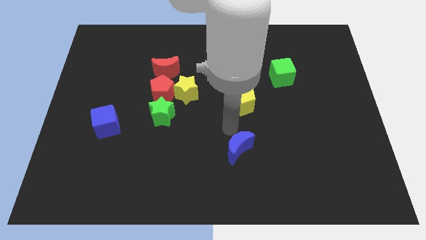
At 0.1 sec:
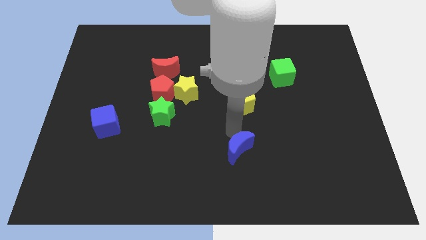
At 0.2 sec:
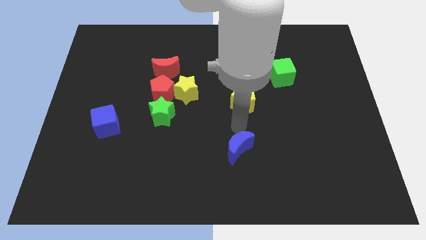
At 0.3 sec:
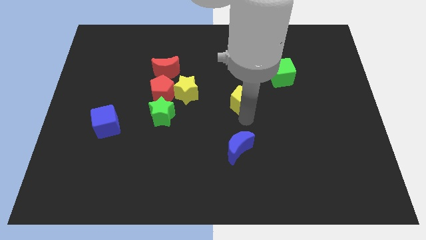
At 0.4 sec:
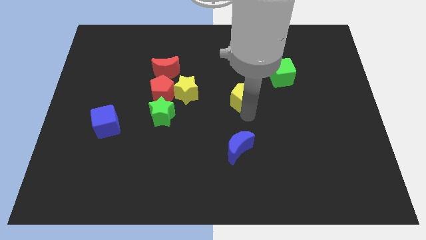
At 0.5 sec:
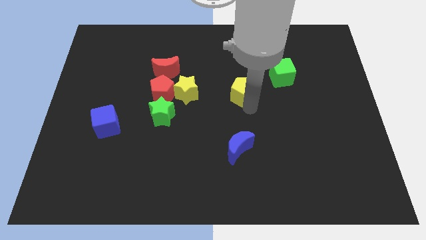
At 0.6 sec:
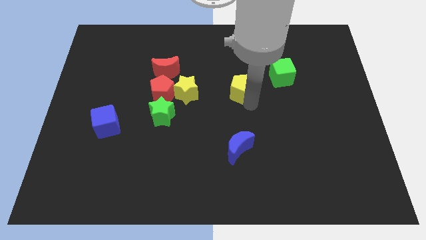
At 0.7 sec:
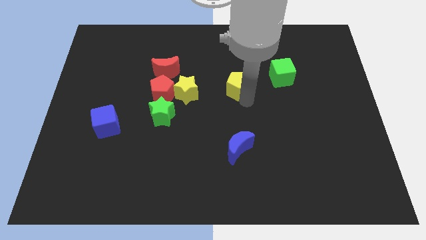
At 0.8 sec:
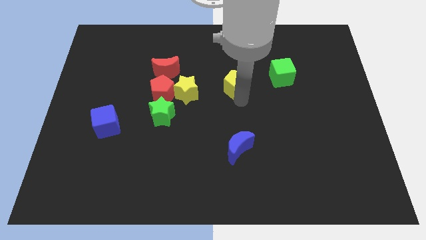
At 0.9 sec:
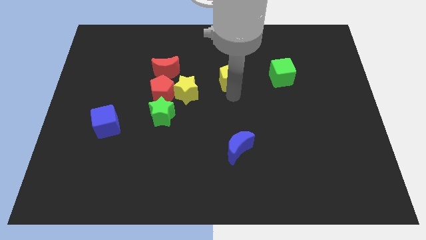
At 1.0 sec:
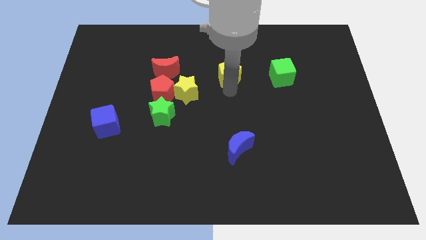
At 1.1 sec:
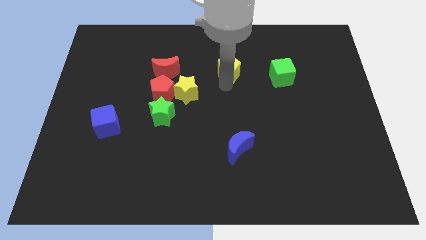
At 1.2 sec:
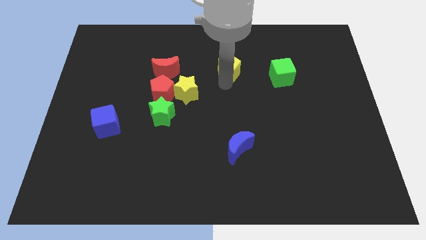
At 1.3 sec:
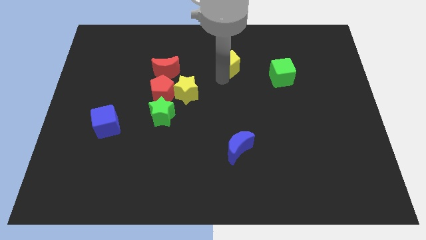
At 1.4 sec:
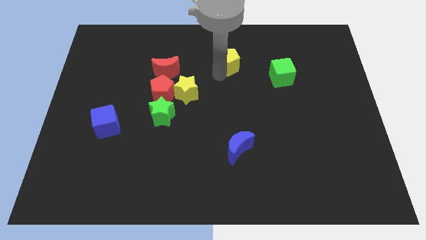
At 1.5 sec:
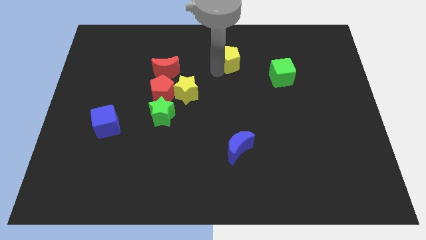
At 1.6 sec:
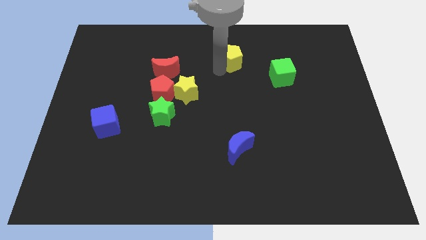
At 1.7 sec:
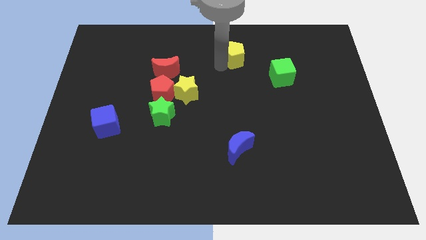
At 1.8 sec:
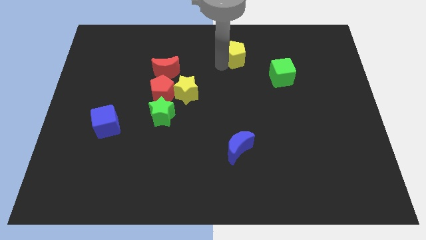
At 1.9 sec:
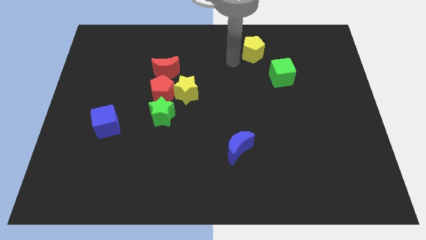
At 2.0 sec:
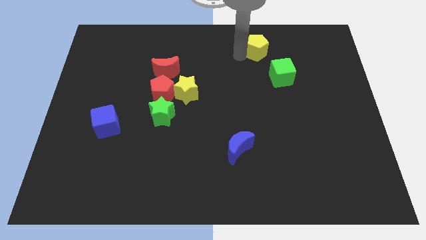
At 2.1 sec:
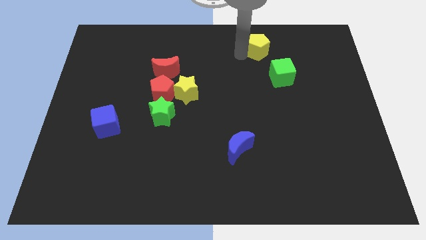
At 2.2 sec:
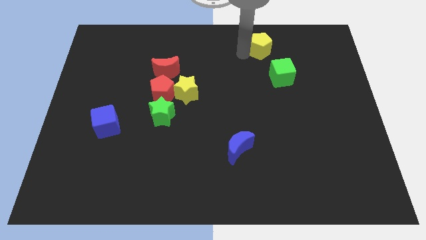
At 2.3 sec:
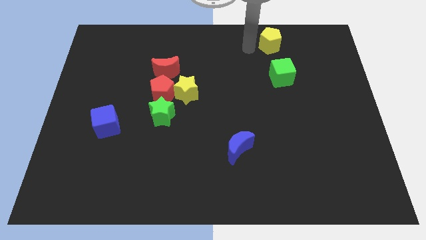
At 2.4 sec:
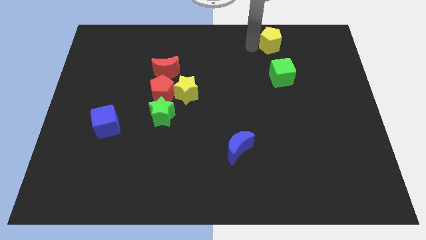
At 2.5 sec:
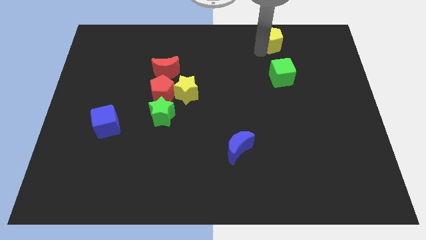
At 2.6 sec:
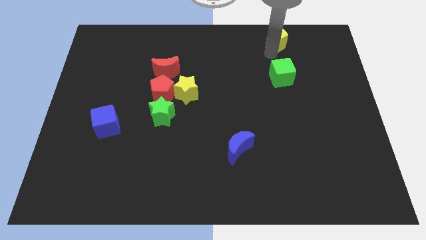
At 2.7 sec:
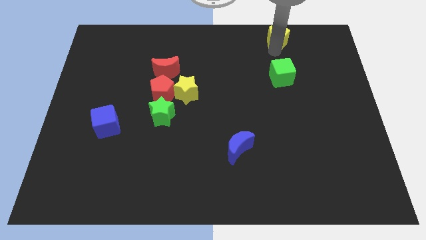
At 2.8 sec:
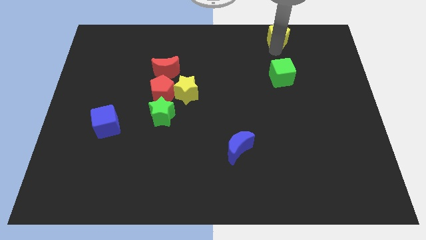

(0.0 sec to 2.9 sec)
push the yellow pentagon above the green cube

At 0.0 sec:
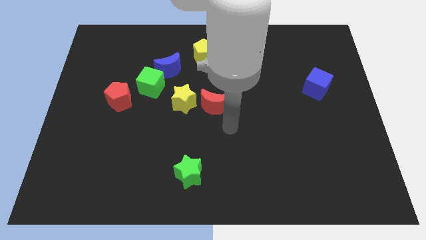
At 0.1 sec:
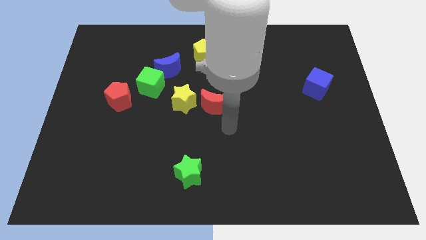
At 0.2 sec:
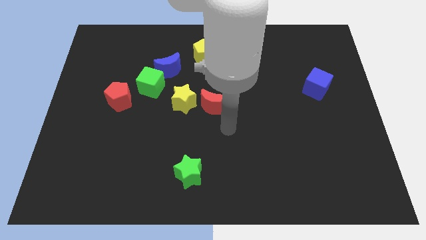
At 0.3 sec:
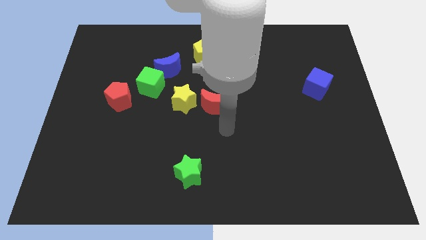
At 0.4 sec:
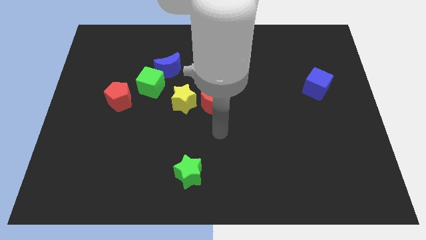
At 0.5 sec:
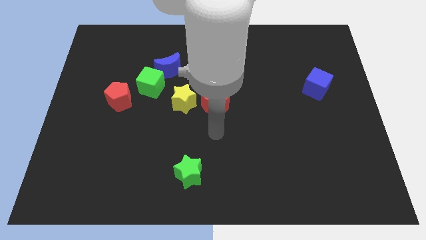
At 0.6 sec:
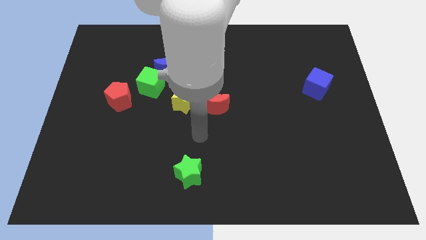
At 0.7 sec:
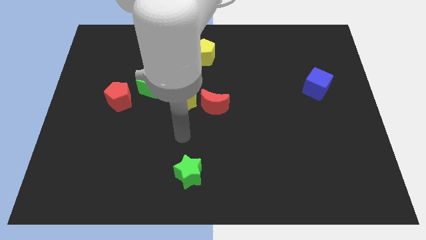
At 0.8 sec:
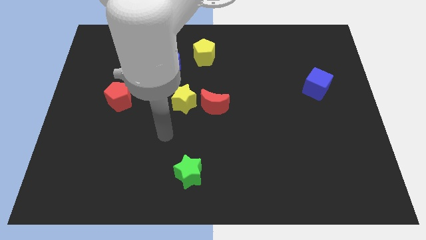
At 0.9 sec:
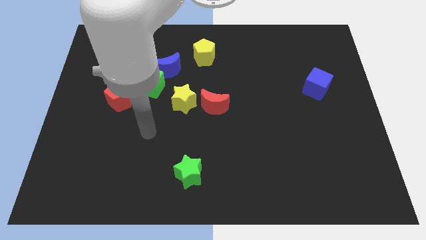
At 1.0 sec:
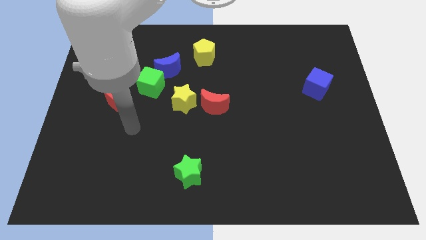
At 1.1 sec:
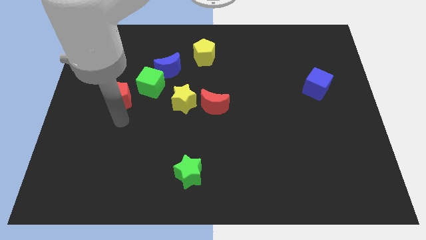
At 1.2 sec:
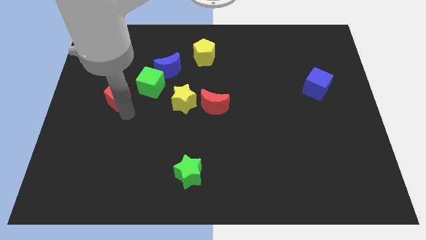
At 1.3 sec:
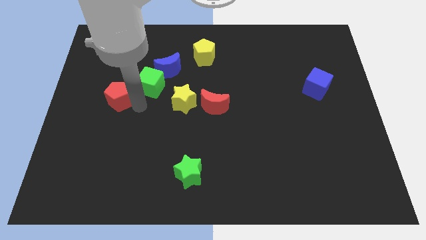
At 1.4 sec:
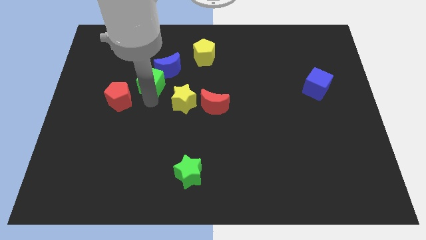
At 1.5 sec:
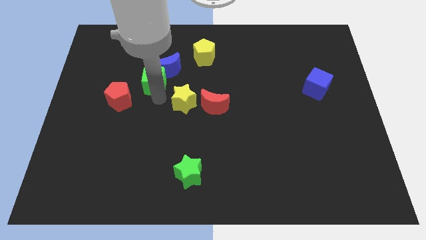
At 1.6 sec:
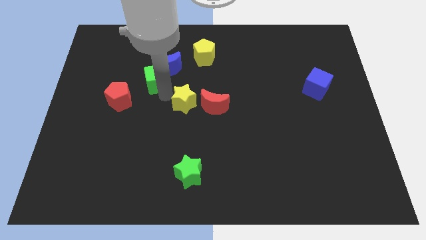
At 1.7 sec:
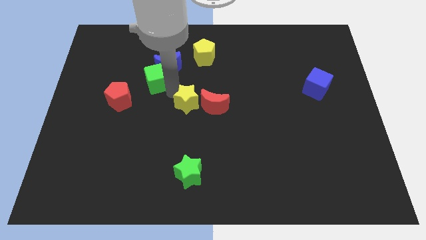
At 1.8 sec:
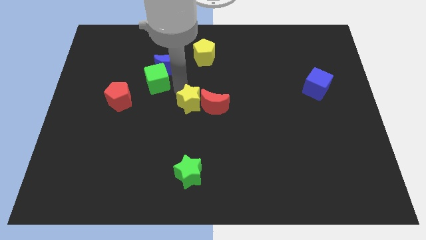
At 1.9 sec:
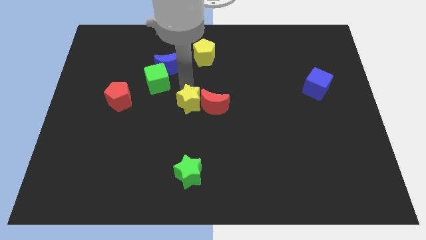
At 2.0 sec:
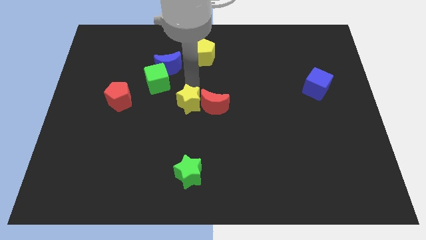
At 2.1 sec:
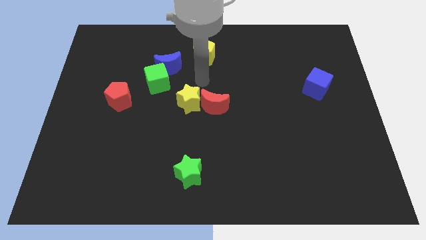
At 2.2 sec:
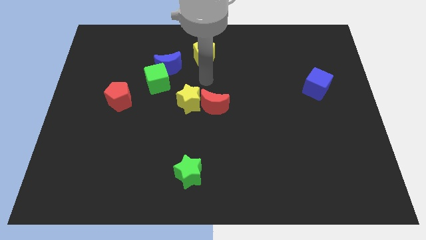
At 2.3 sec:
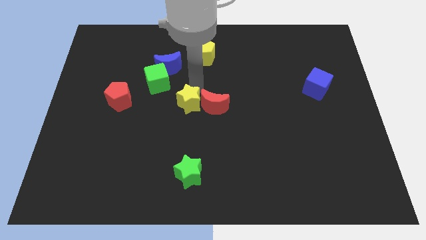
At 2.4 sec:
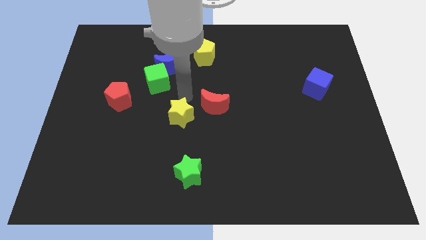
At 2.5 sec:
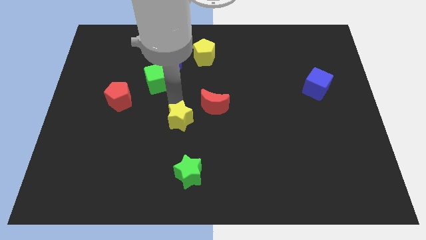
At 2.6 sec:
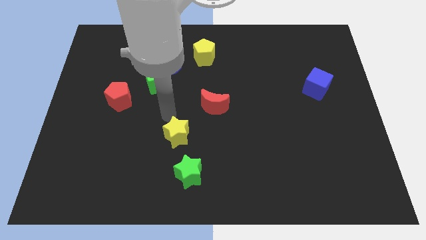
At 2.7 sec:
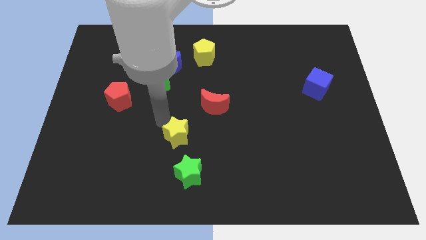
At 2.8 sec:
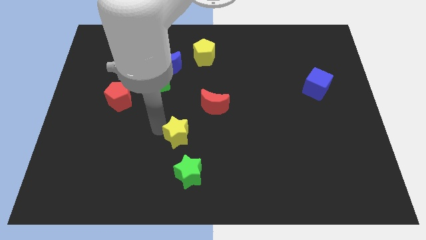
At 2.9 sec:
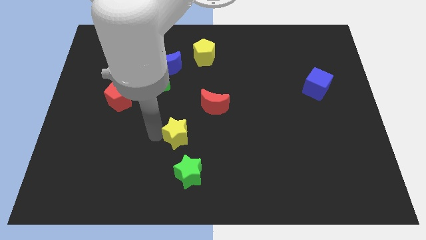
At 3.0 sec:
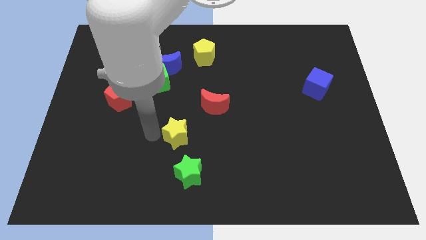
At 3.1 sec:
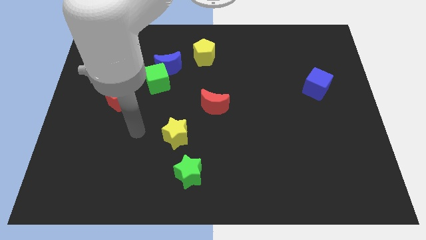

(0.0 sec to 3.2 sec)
move yellow star above green star

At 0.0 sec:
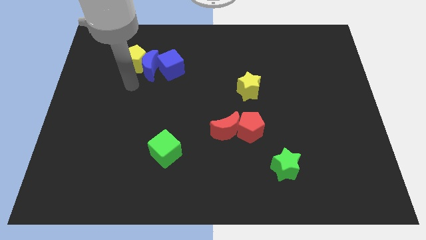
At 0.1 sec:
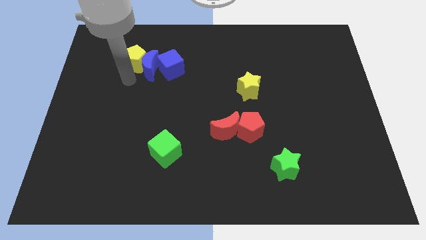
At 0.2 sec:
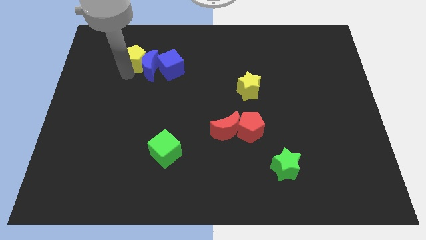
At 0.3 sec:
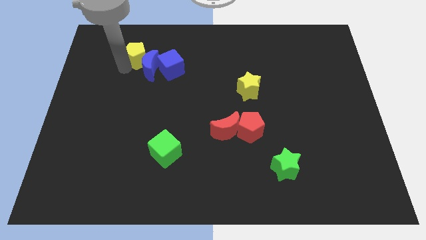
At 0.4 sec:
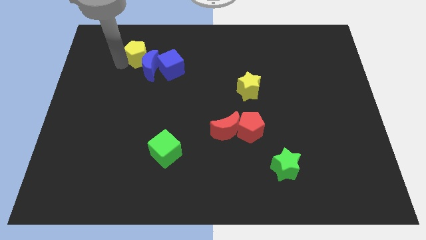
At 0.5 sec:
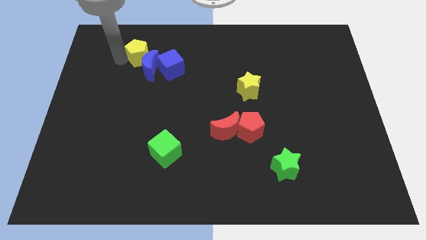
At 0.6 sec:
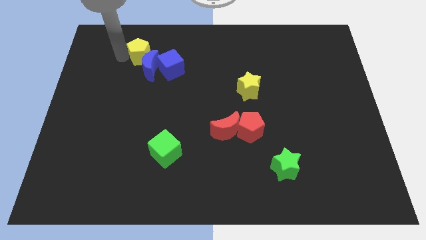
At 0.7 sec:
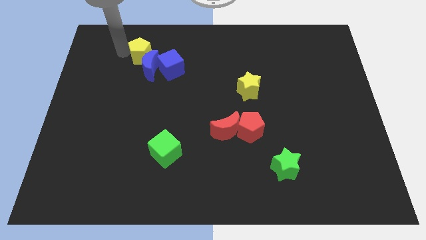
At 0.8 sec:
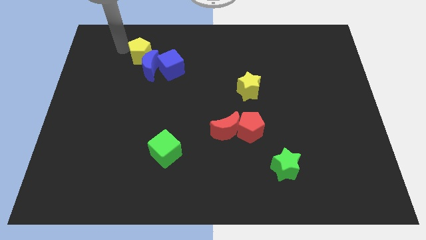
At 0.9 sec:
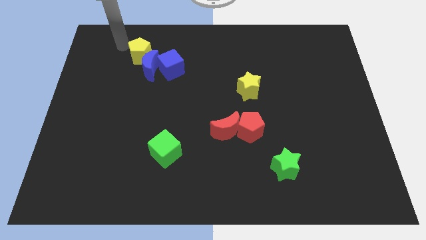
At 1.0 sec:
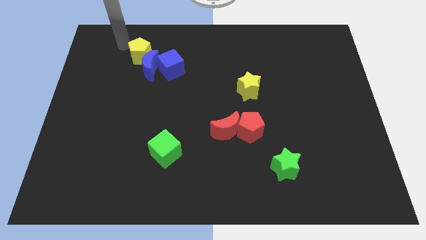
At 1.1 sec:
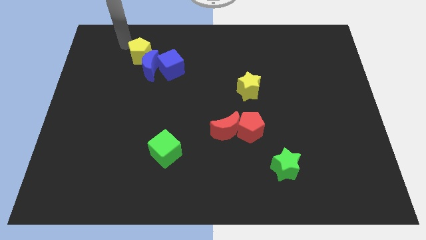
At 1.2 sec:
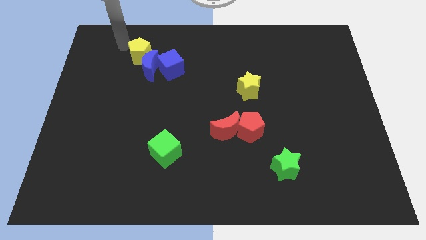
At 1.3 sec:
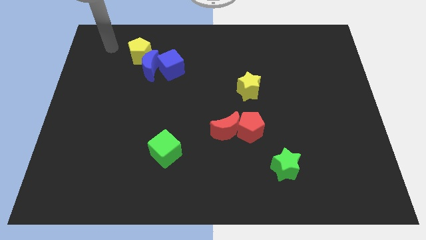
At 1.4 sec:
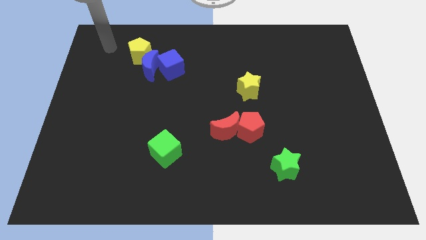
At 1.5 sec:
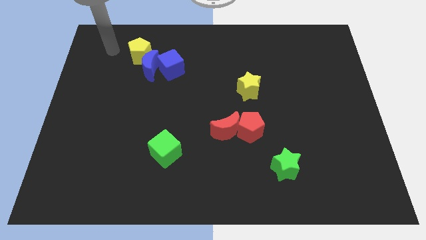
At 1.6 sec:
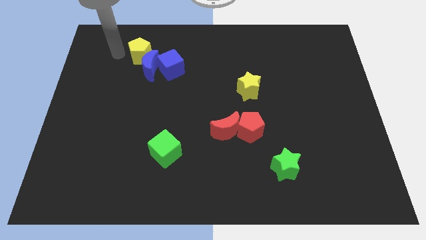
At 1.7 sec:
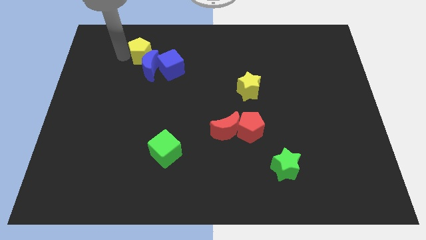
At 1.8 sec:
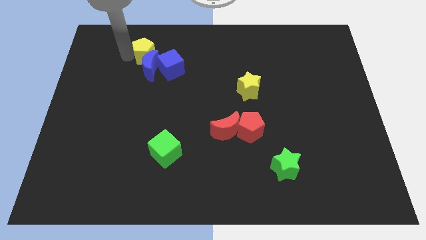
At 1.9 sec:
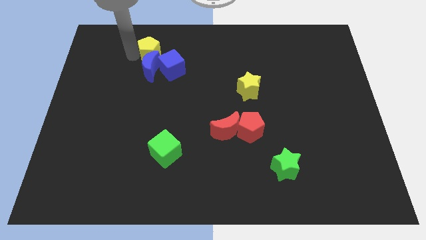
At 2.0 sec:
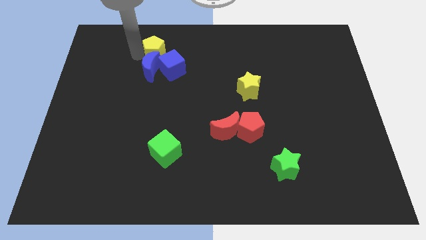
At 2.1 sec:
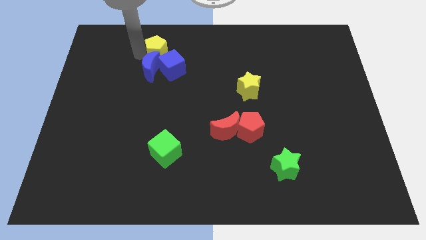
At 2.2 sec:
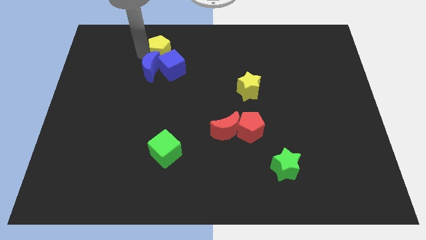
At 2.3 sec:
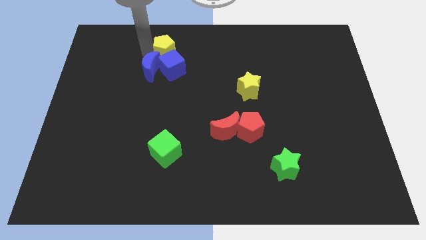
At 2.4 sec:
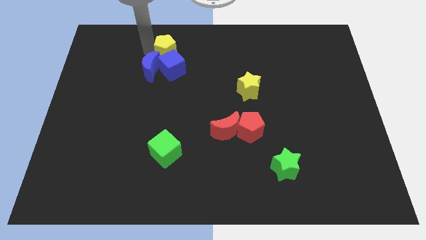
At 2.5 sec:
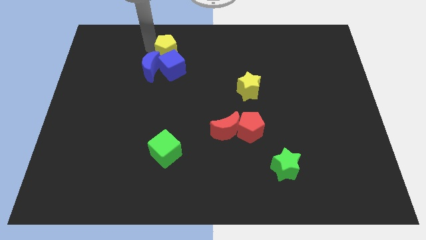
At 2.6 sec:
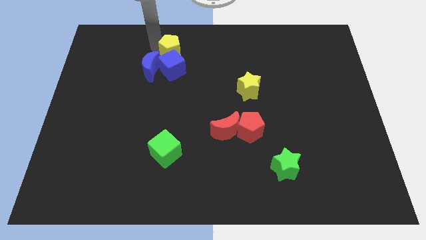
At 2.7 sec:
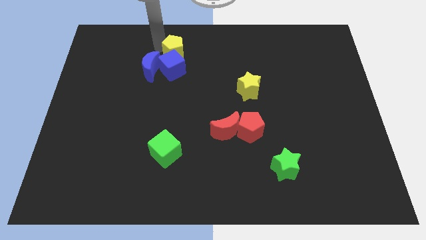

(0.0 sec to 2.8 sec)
move the yellow pentagon above to the blue cube

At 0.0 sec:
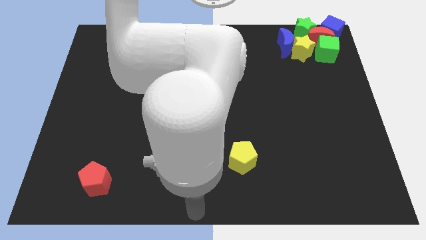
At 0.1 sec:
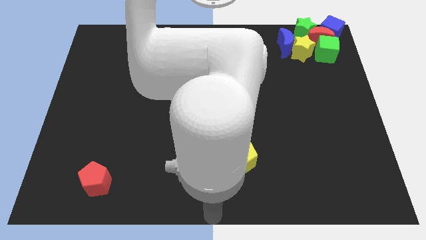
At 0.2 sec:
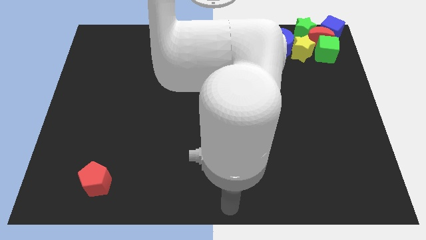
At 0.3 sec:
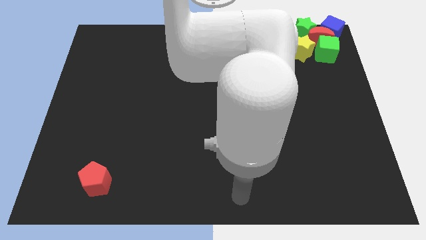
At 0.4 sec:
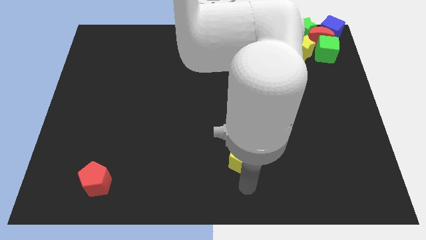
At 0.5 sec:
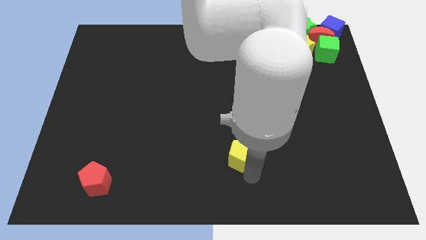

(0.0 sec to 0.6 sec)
move the arm towards the yellow pentagon
